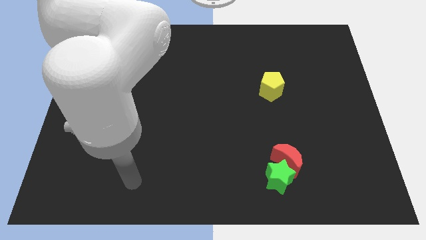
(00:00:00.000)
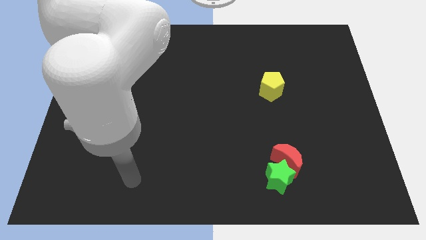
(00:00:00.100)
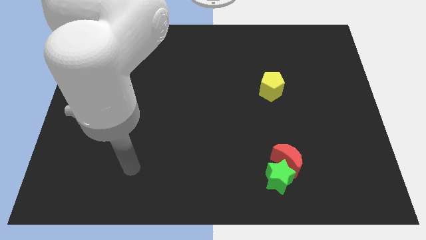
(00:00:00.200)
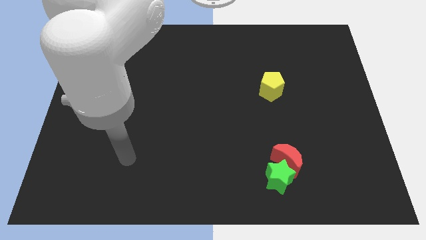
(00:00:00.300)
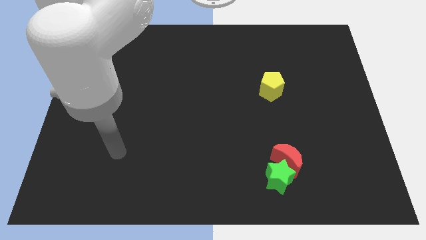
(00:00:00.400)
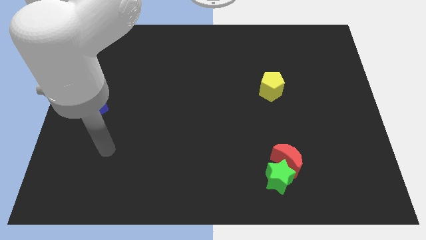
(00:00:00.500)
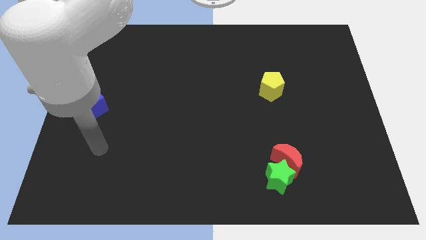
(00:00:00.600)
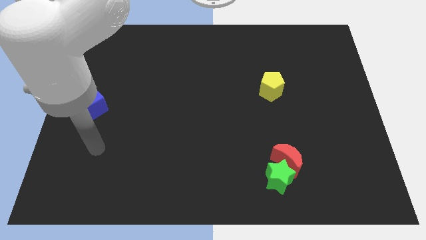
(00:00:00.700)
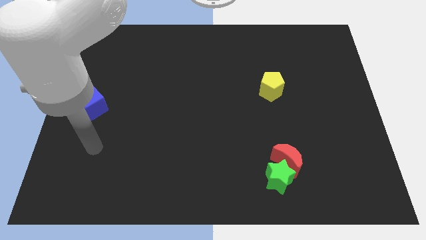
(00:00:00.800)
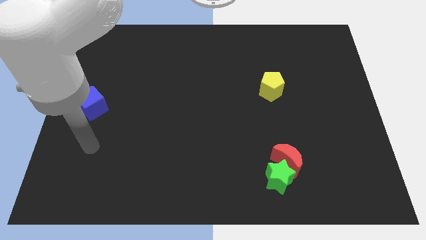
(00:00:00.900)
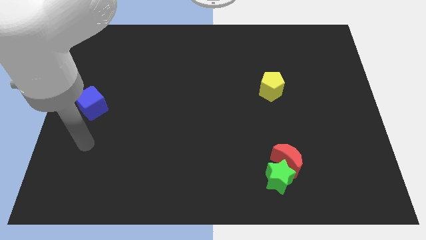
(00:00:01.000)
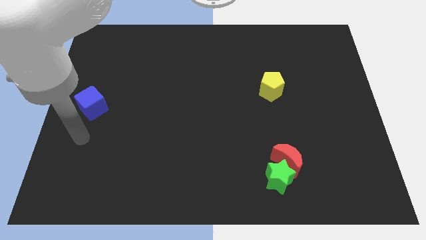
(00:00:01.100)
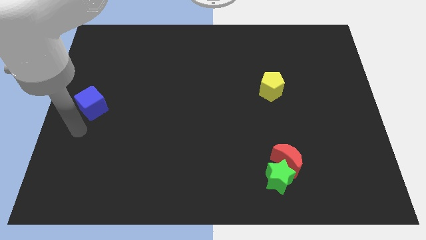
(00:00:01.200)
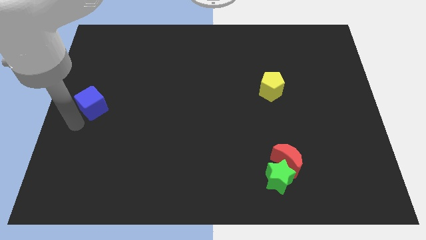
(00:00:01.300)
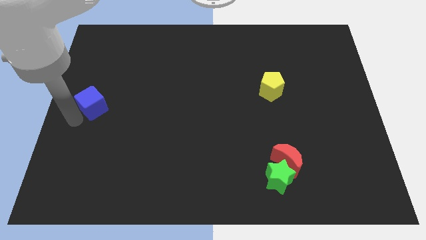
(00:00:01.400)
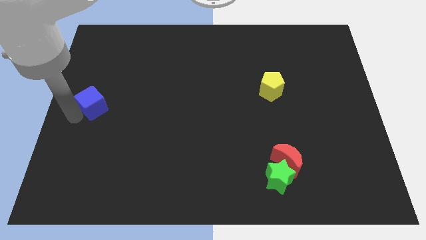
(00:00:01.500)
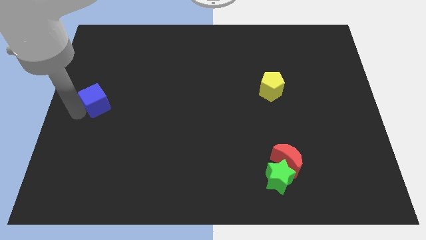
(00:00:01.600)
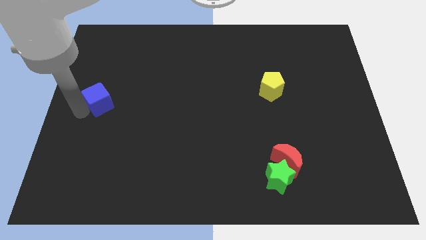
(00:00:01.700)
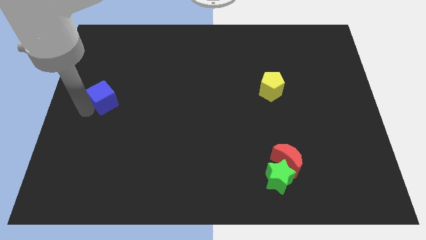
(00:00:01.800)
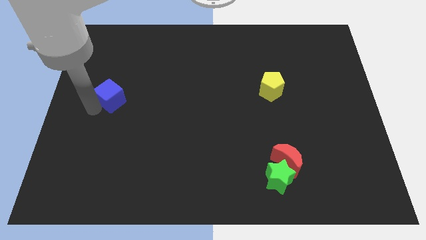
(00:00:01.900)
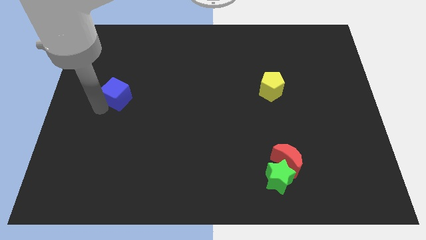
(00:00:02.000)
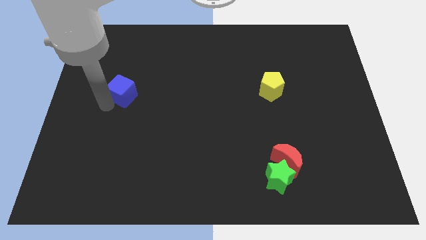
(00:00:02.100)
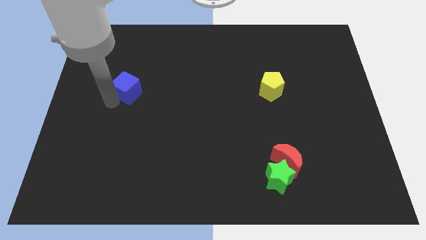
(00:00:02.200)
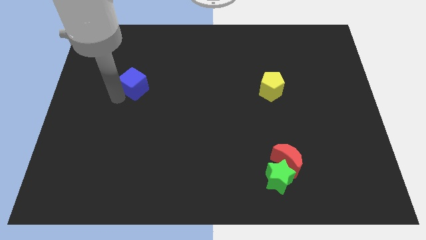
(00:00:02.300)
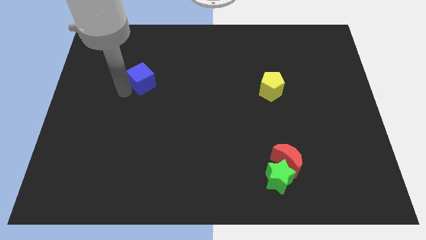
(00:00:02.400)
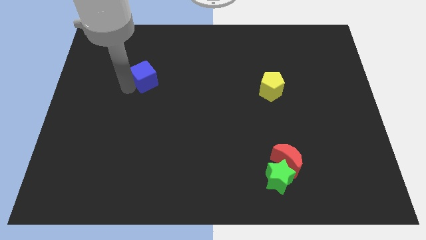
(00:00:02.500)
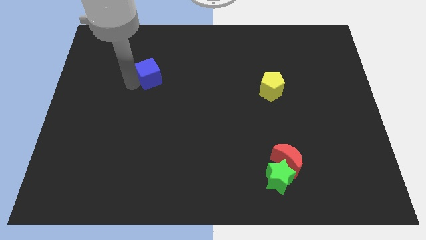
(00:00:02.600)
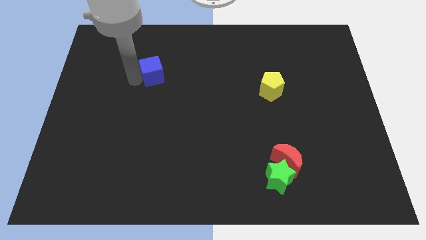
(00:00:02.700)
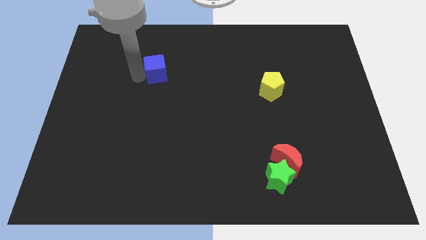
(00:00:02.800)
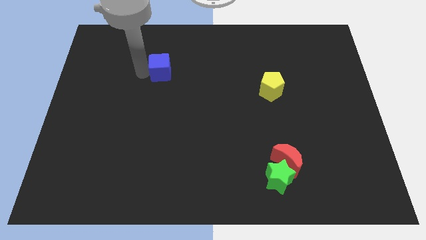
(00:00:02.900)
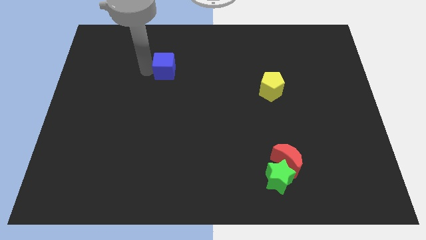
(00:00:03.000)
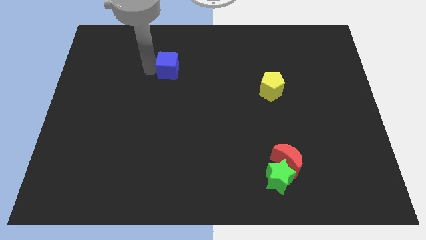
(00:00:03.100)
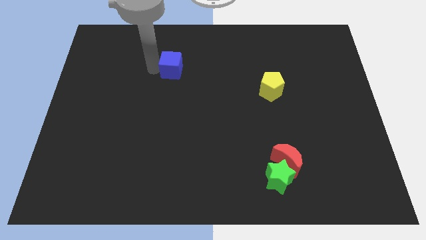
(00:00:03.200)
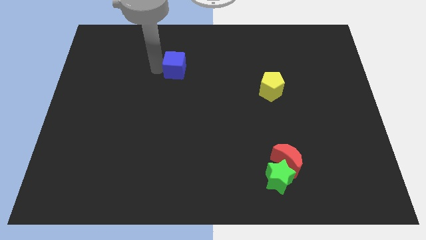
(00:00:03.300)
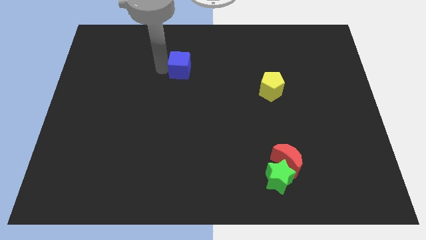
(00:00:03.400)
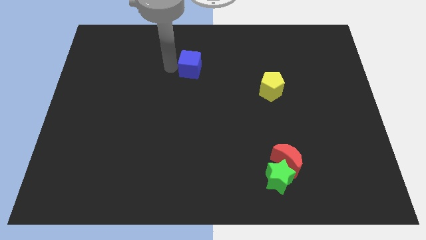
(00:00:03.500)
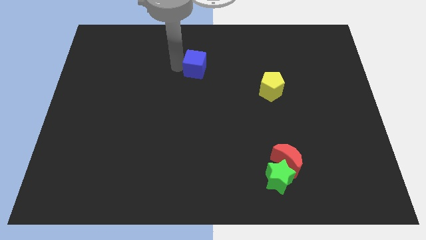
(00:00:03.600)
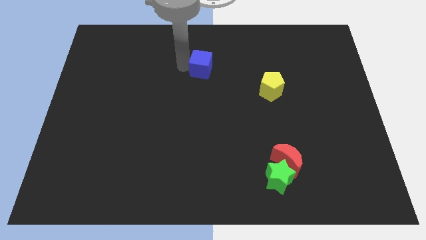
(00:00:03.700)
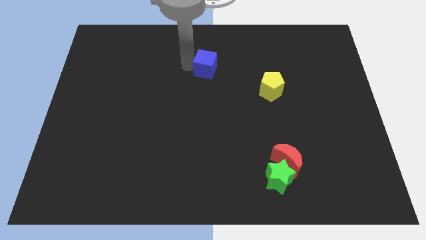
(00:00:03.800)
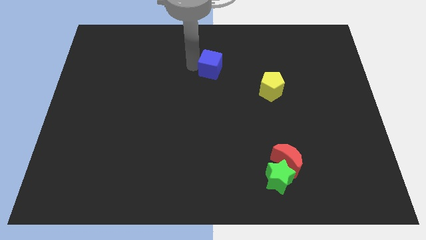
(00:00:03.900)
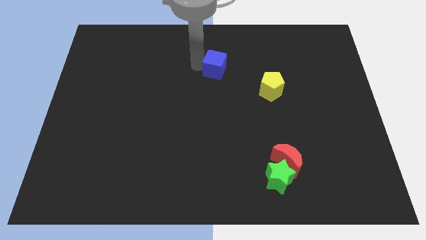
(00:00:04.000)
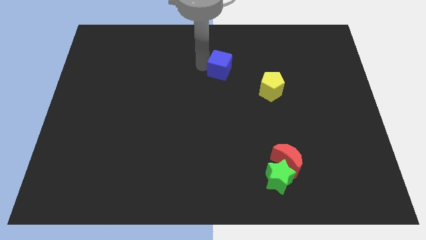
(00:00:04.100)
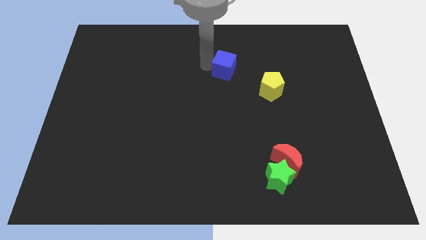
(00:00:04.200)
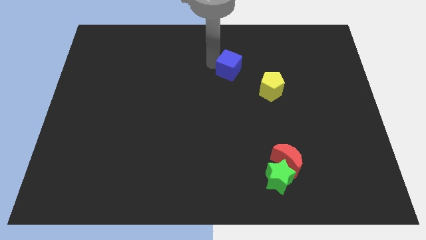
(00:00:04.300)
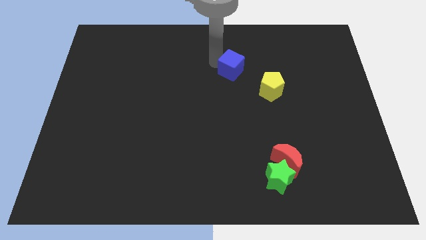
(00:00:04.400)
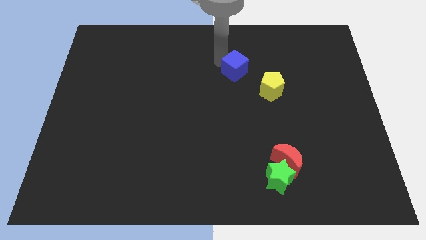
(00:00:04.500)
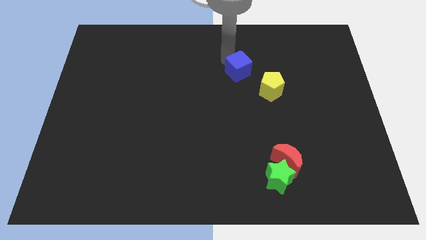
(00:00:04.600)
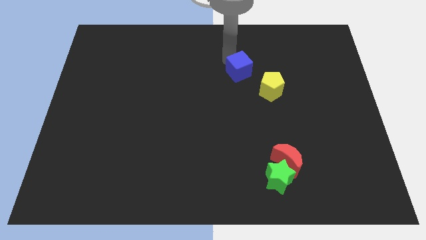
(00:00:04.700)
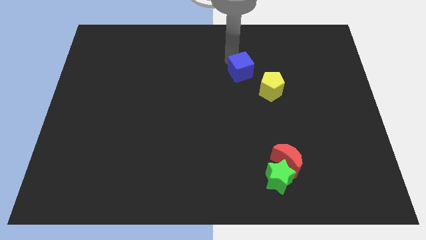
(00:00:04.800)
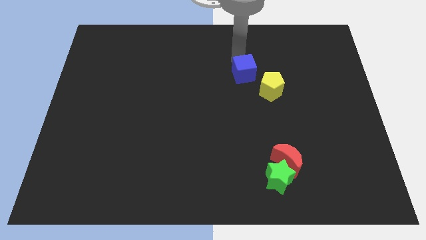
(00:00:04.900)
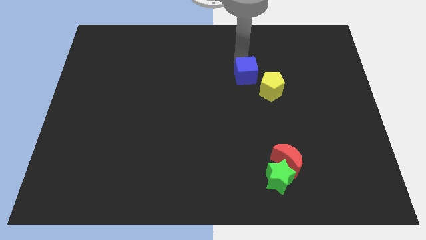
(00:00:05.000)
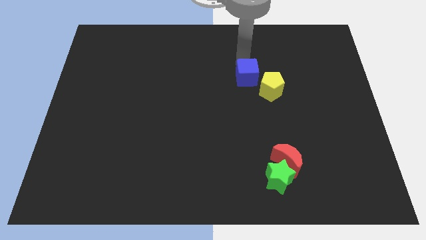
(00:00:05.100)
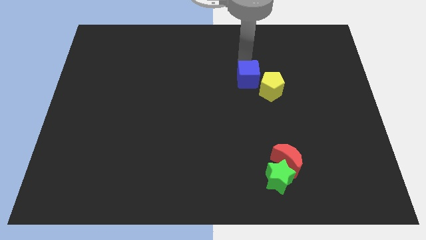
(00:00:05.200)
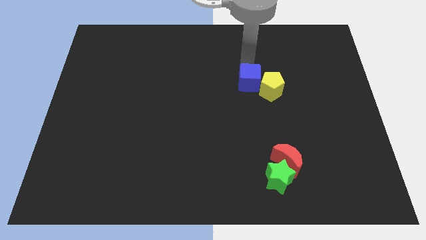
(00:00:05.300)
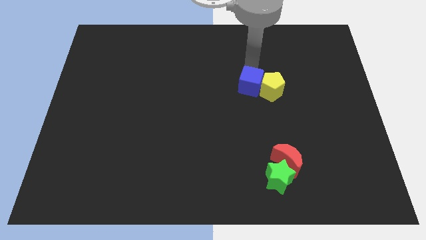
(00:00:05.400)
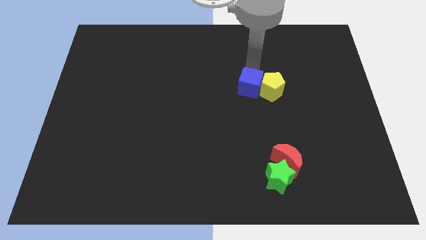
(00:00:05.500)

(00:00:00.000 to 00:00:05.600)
push the cube to the yellow block

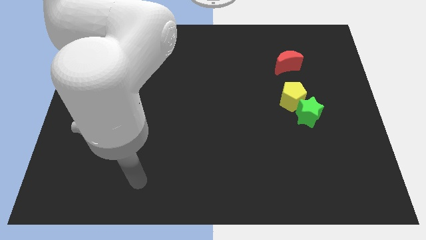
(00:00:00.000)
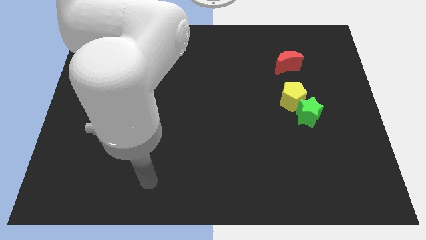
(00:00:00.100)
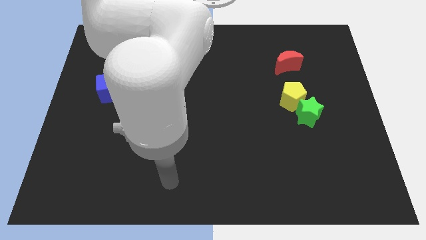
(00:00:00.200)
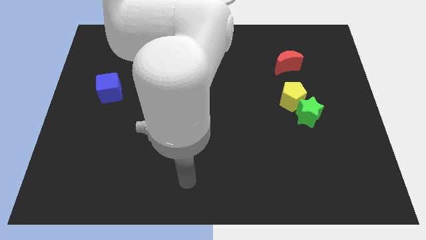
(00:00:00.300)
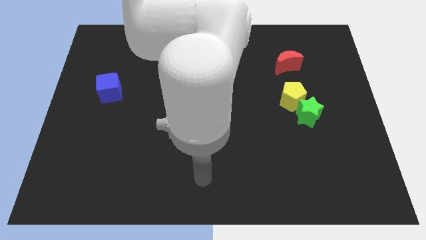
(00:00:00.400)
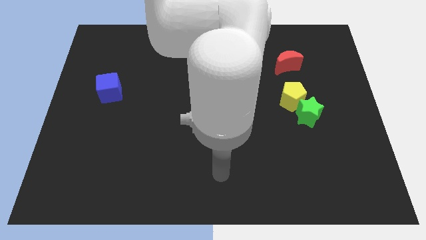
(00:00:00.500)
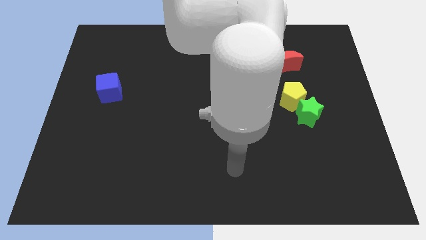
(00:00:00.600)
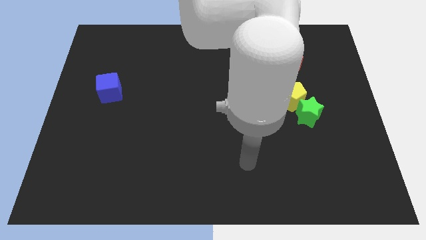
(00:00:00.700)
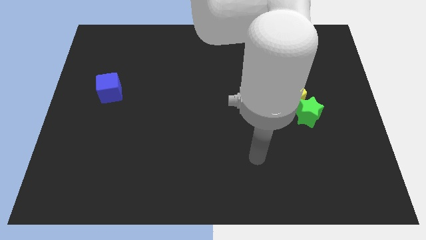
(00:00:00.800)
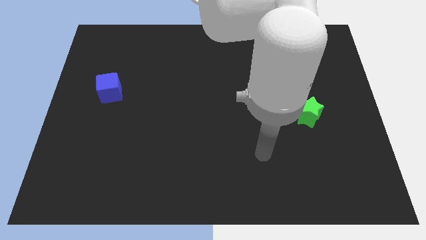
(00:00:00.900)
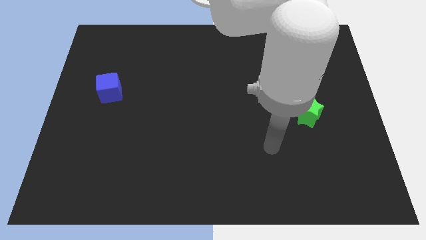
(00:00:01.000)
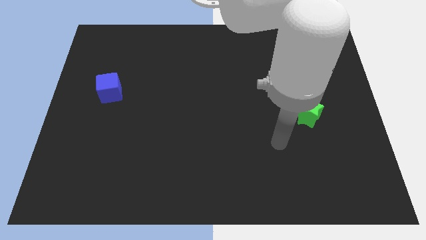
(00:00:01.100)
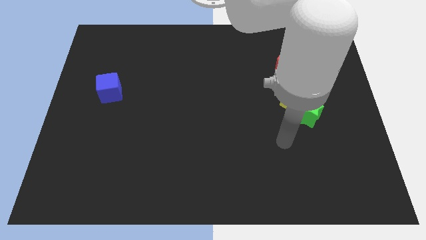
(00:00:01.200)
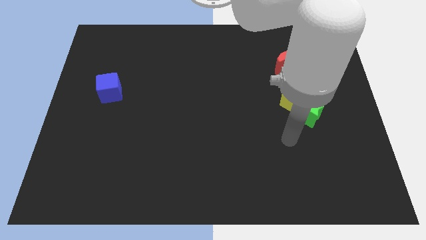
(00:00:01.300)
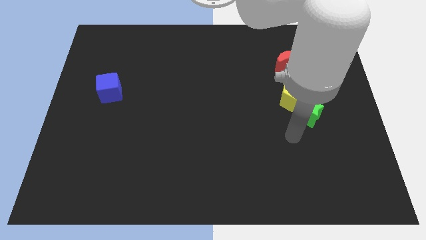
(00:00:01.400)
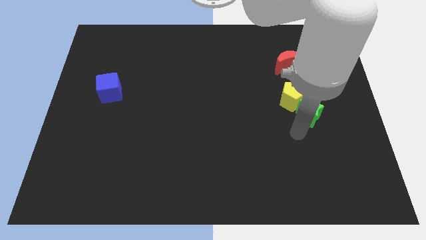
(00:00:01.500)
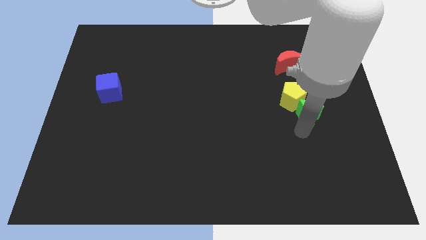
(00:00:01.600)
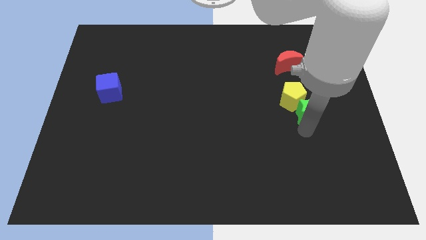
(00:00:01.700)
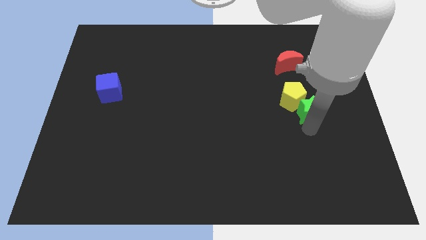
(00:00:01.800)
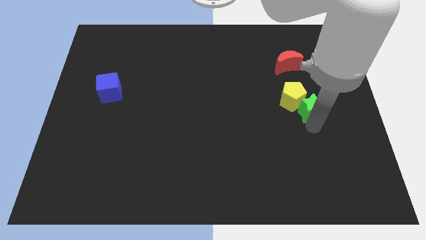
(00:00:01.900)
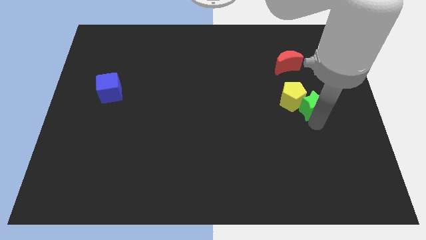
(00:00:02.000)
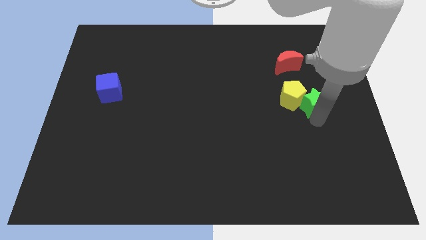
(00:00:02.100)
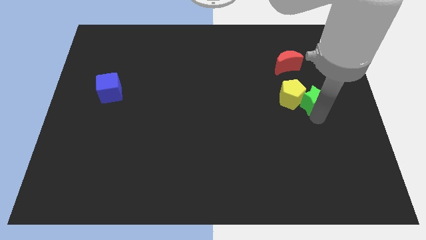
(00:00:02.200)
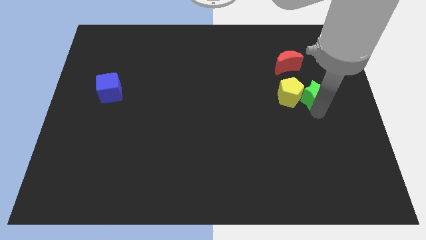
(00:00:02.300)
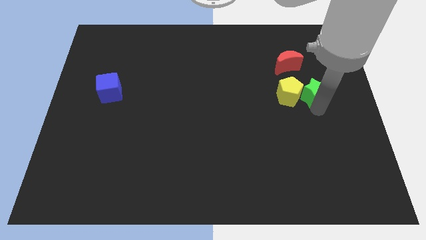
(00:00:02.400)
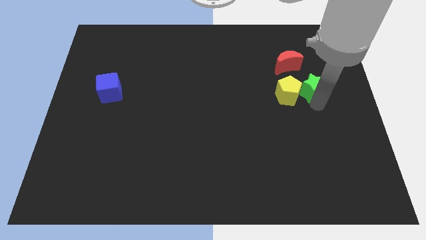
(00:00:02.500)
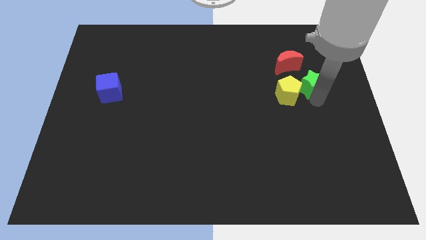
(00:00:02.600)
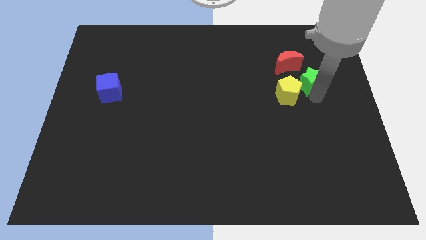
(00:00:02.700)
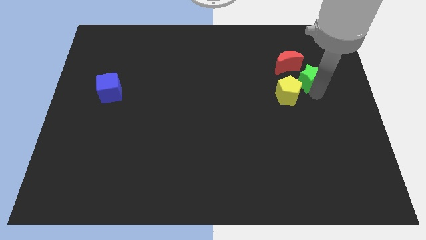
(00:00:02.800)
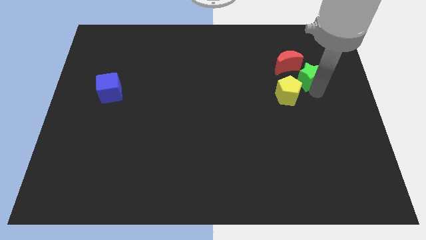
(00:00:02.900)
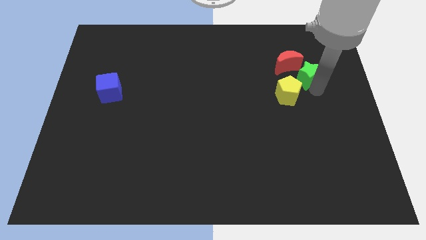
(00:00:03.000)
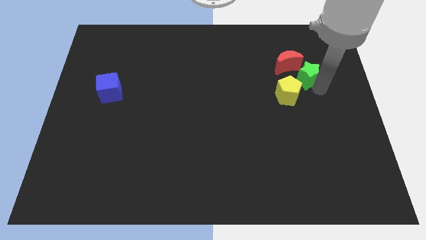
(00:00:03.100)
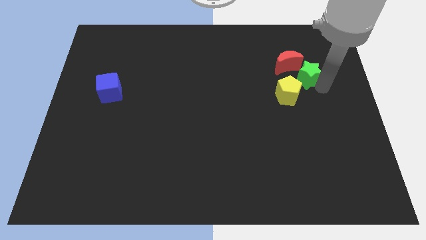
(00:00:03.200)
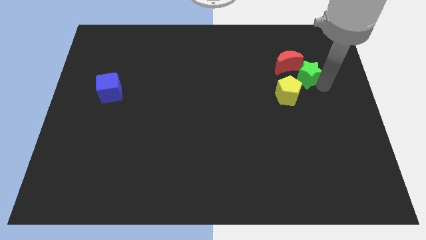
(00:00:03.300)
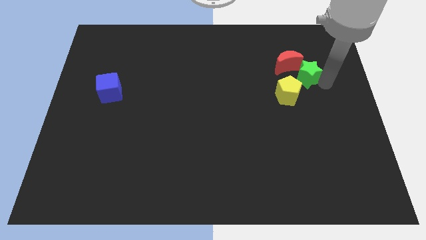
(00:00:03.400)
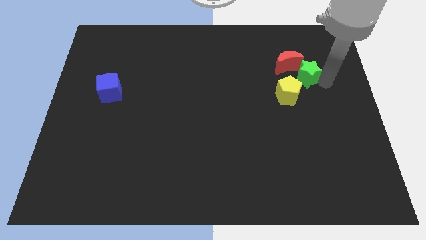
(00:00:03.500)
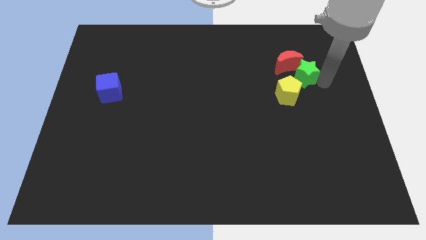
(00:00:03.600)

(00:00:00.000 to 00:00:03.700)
put the star next to the red block
